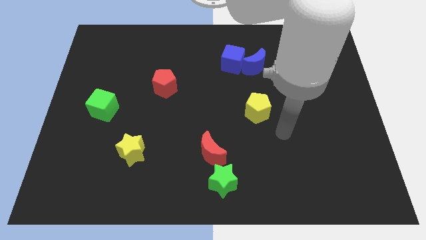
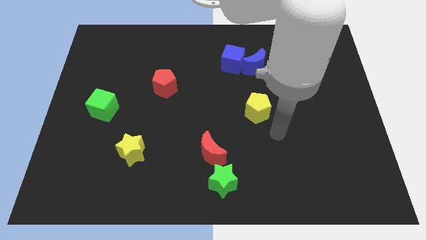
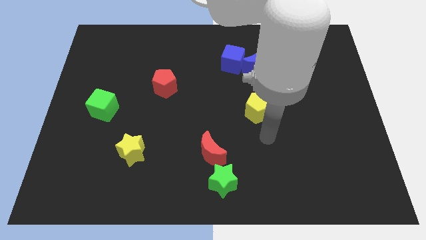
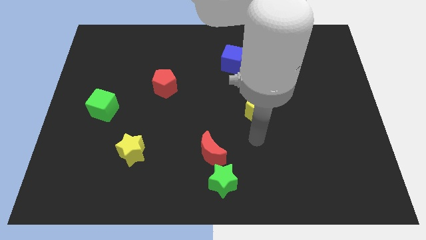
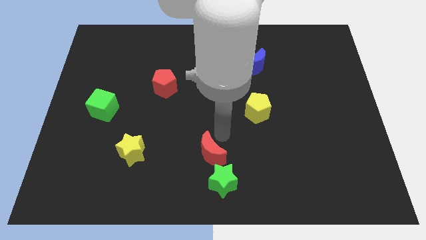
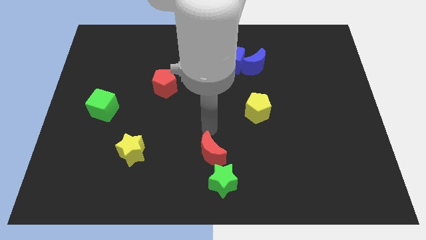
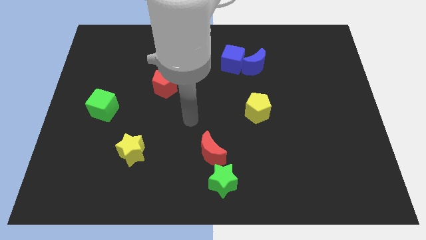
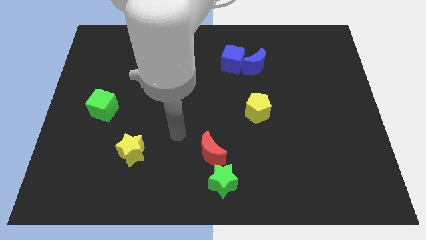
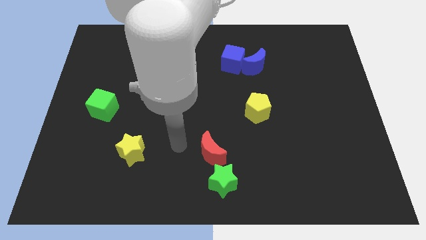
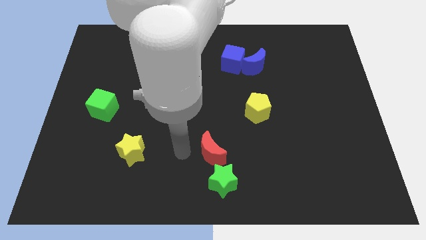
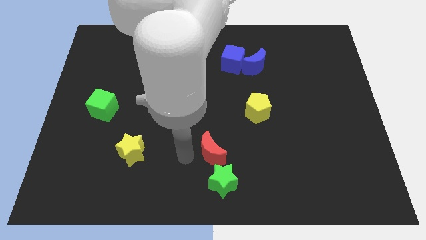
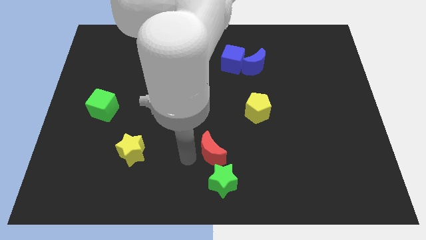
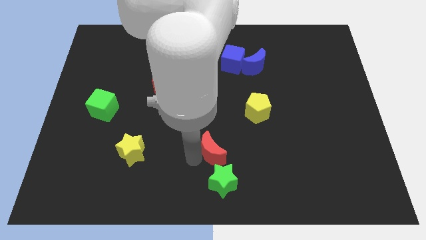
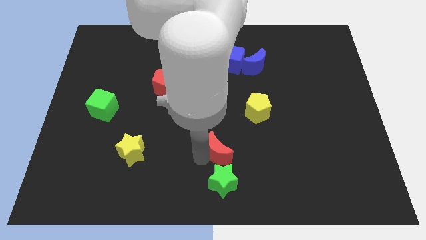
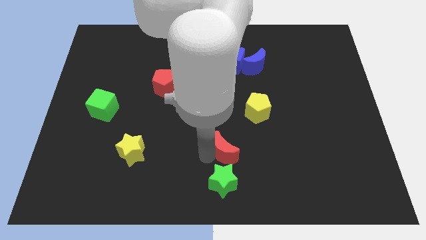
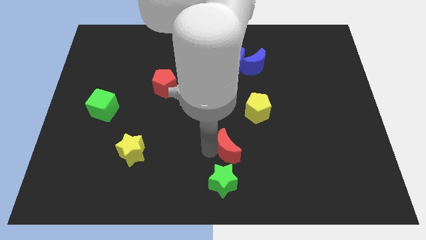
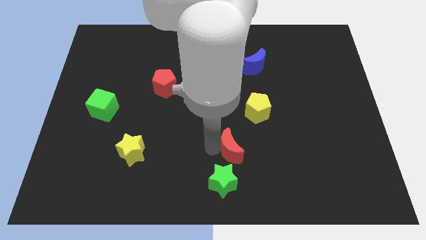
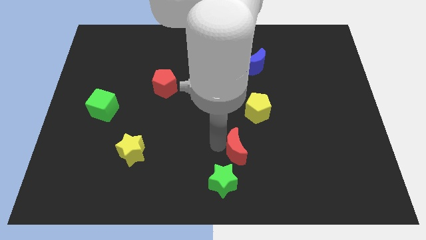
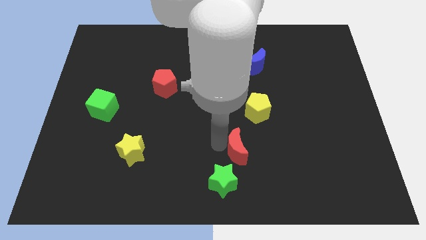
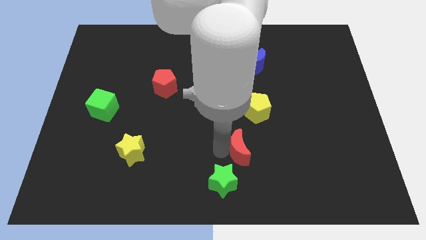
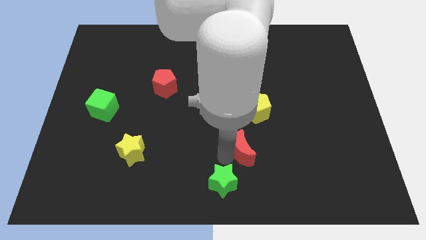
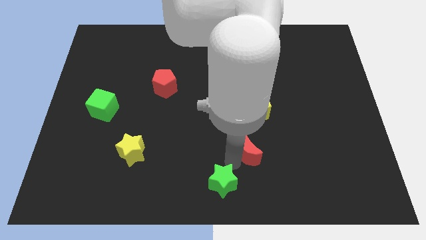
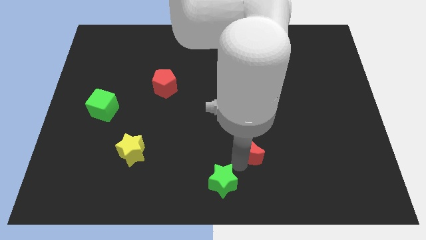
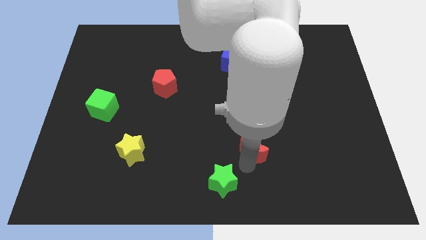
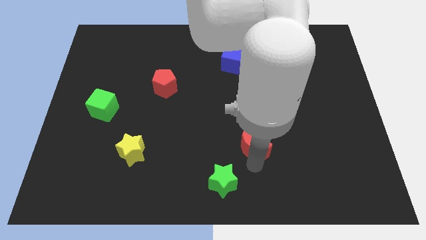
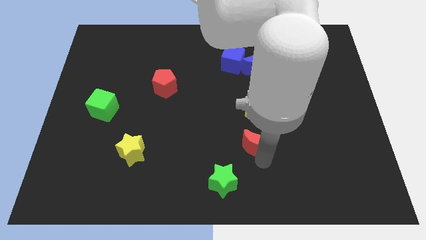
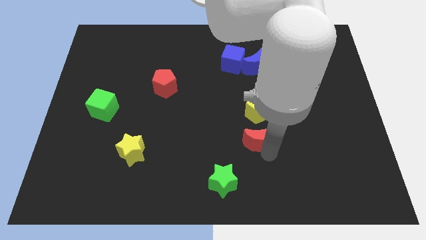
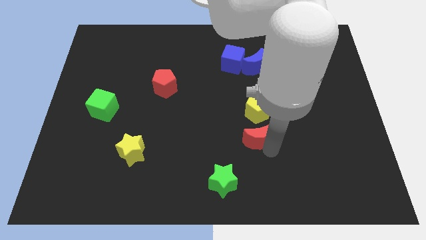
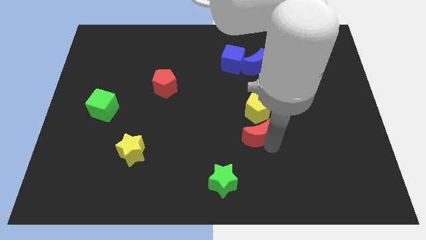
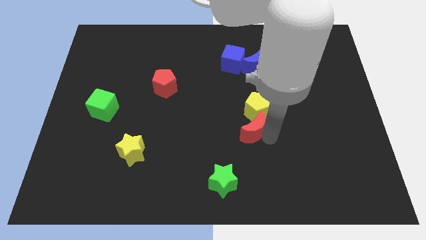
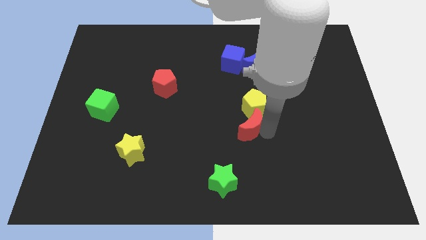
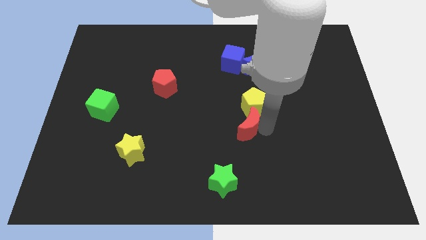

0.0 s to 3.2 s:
put the red moon to the yellow pentagon

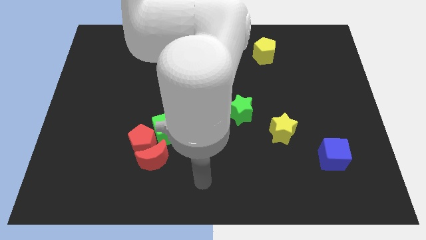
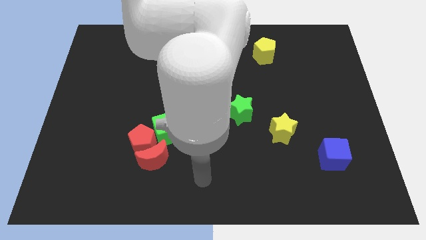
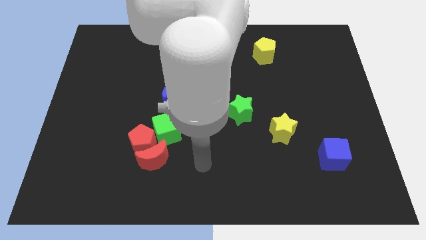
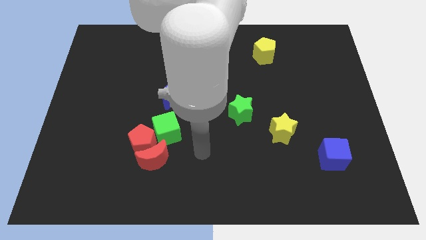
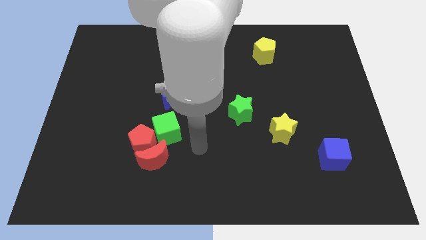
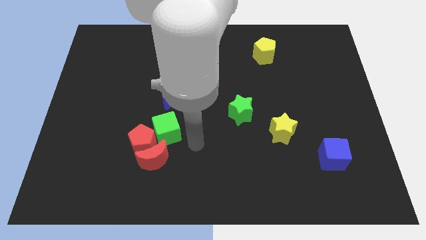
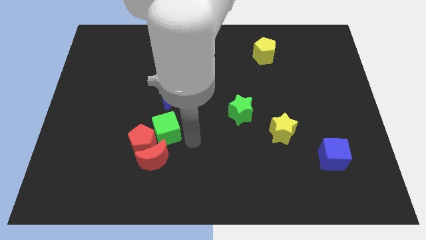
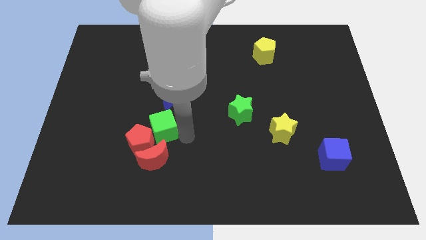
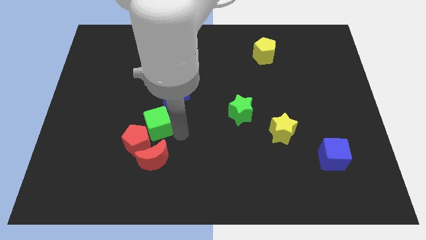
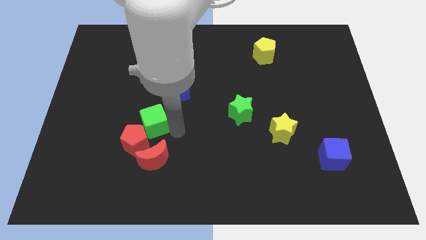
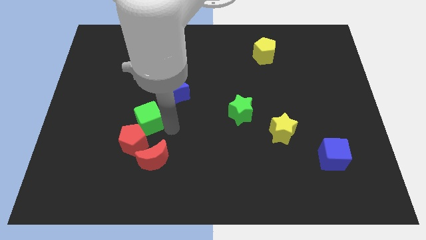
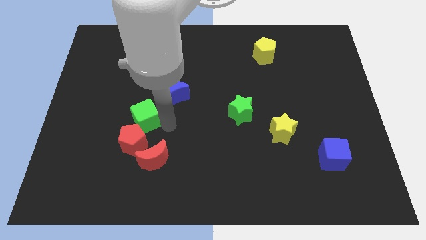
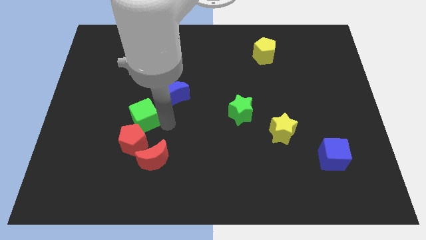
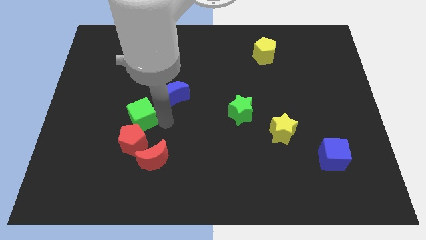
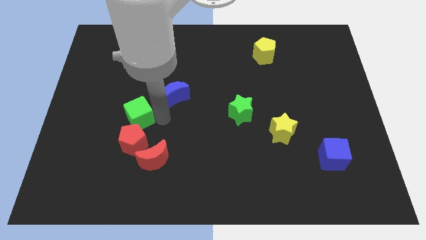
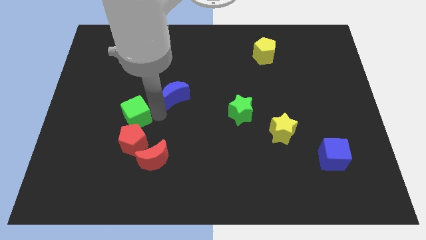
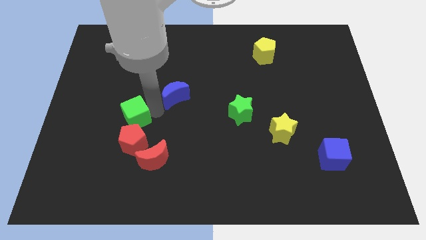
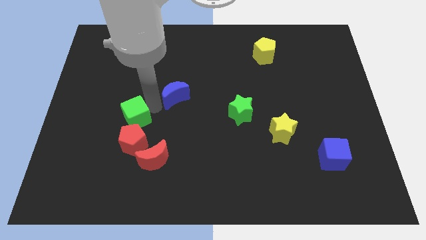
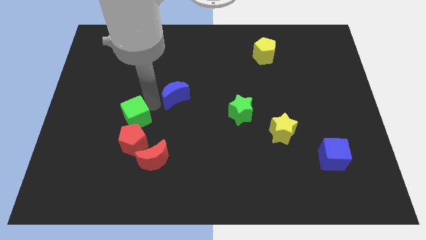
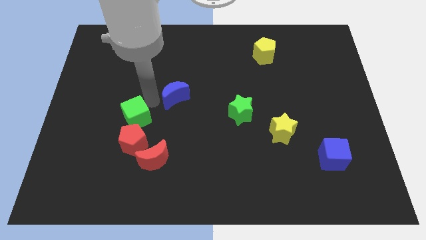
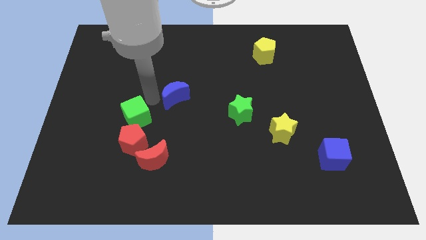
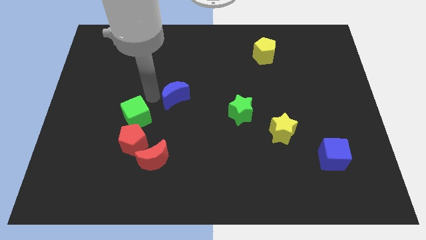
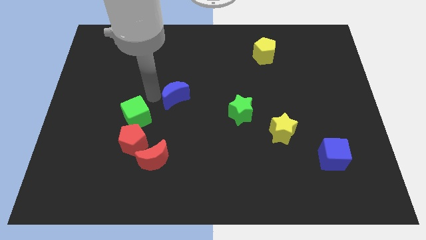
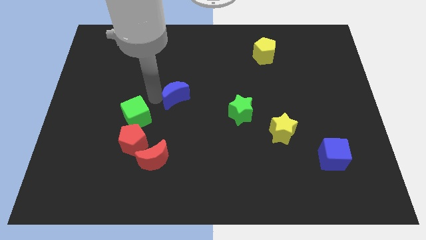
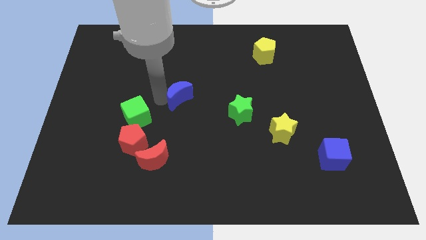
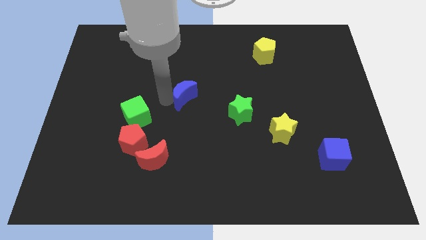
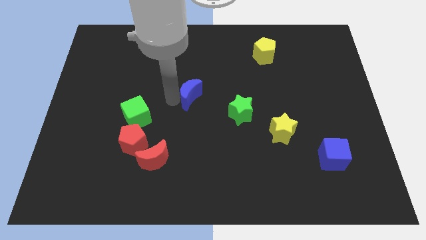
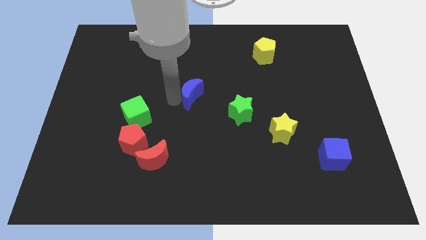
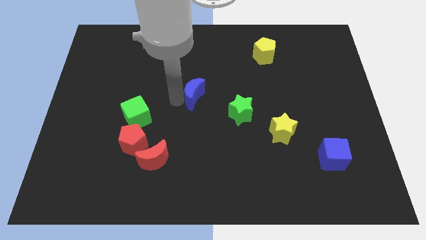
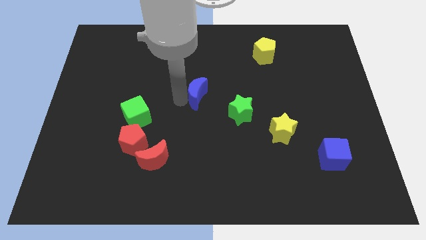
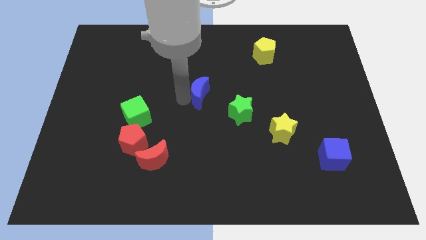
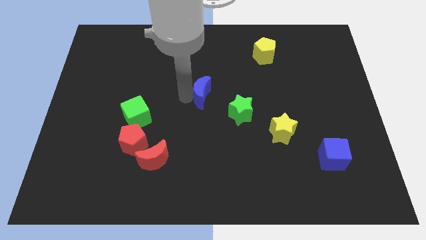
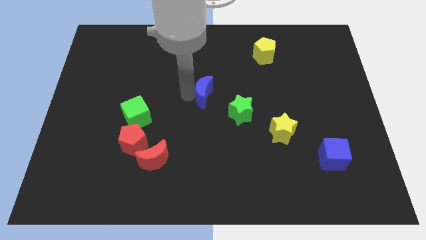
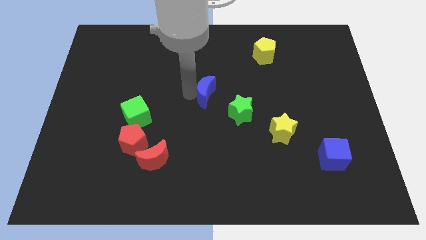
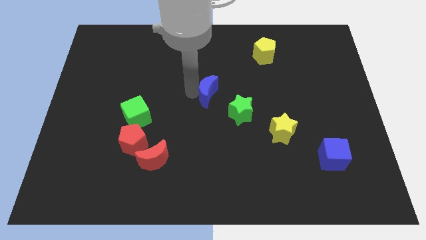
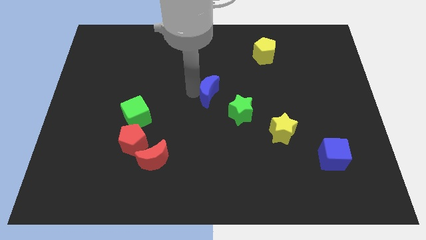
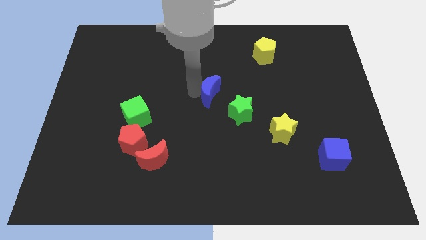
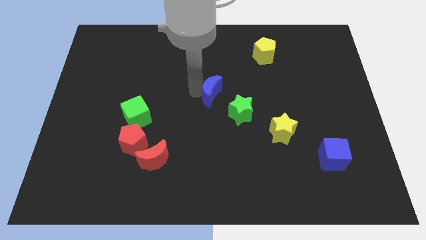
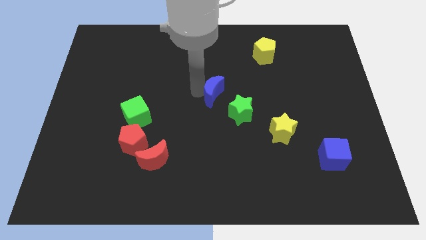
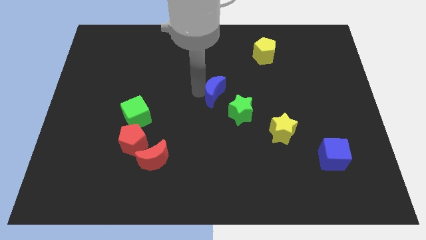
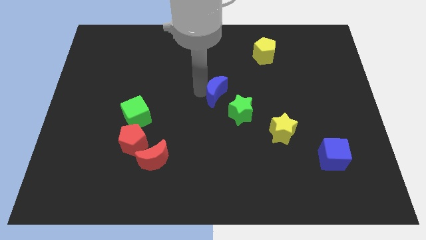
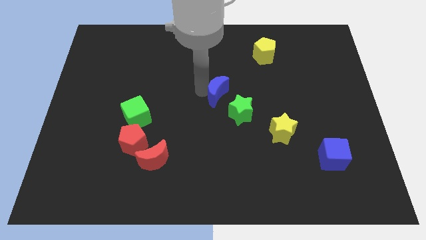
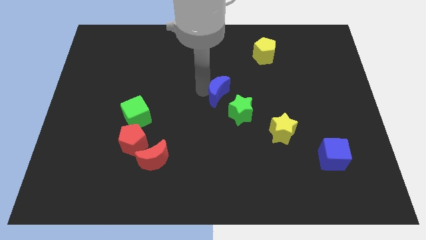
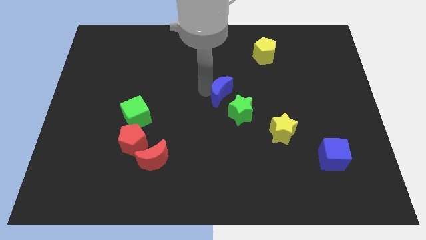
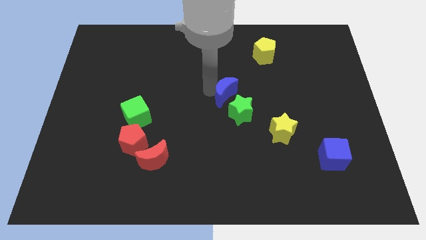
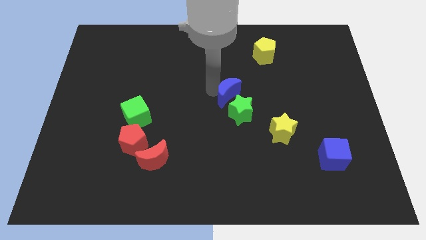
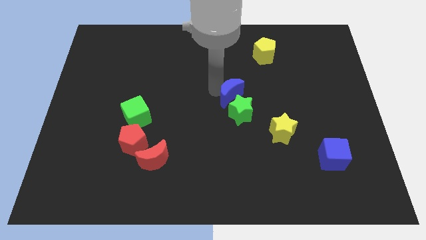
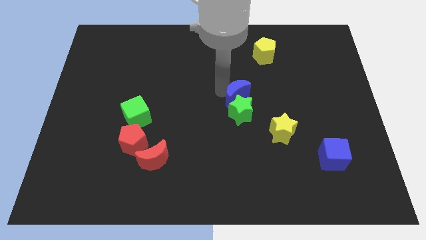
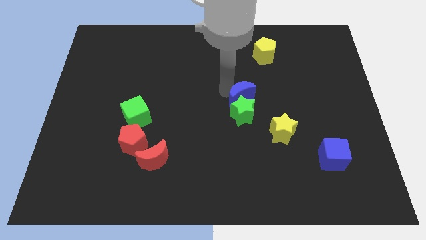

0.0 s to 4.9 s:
move the blue moon next to the green star

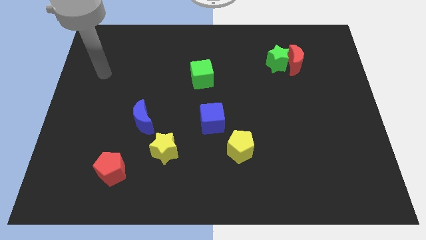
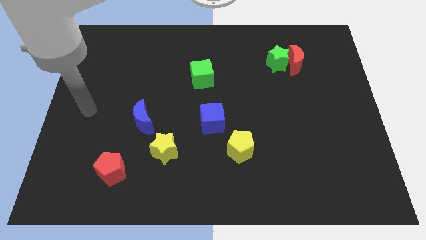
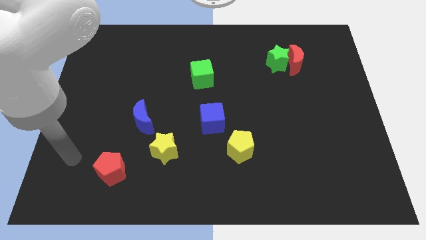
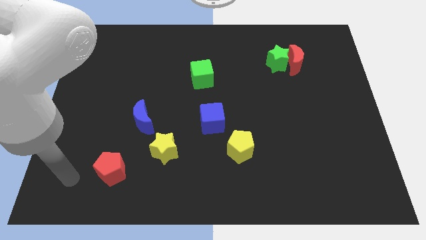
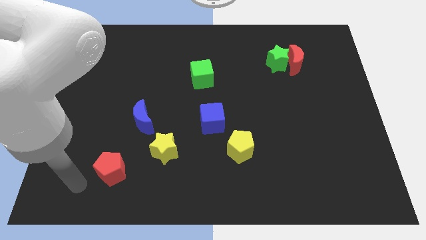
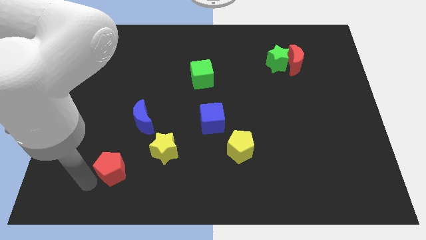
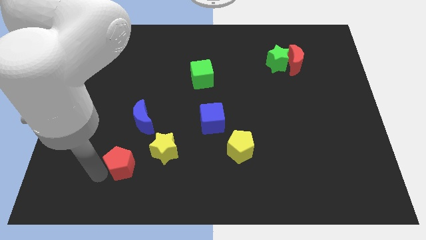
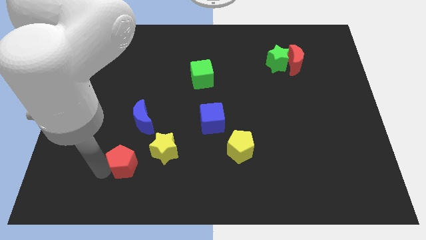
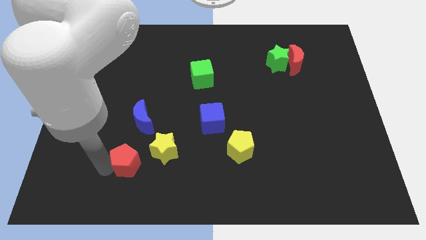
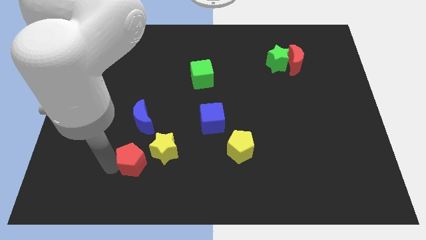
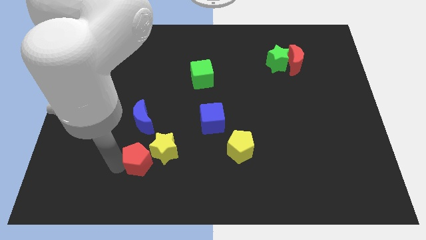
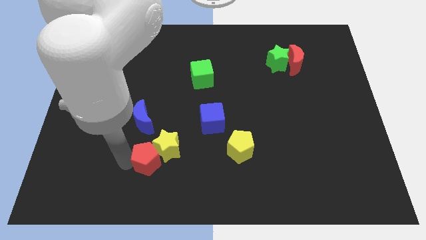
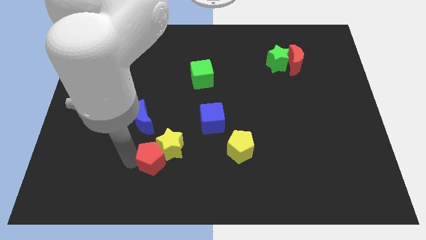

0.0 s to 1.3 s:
push the red pentagon next to the yellow star
